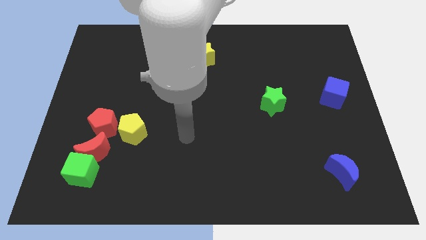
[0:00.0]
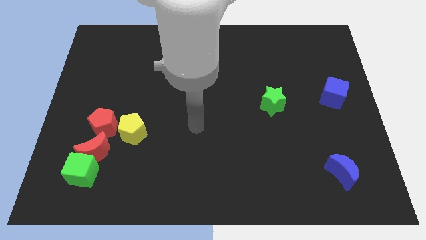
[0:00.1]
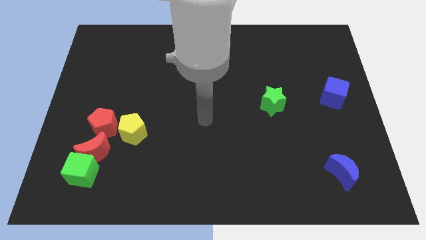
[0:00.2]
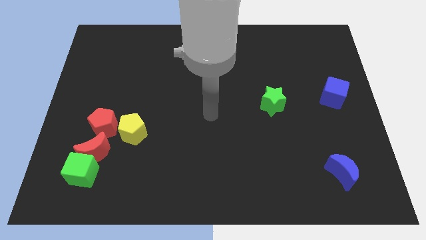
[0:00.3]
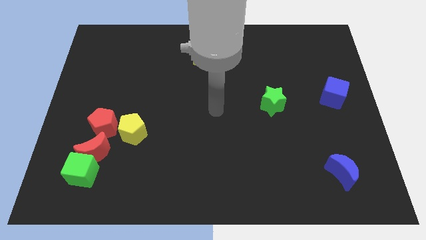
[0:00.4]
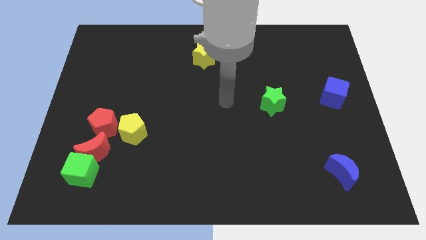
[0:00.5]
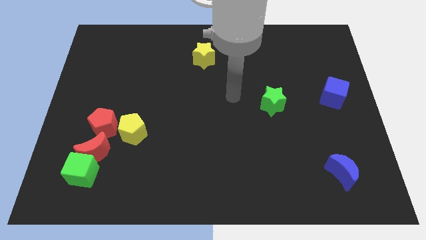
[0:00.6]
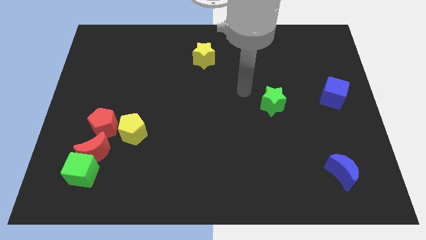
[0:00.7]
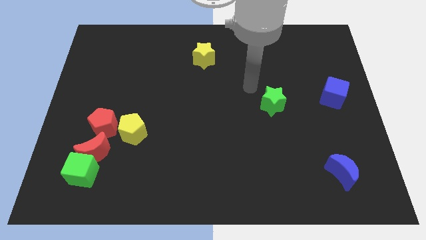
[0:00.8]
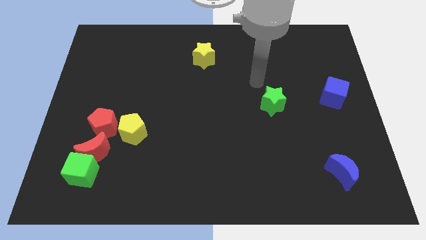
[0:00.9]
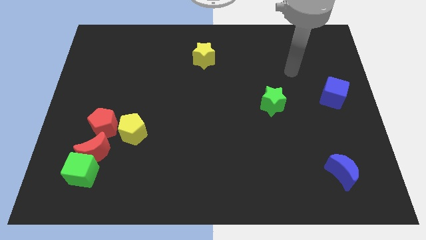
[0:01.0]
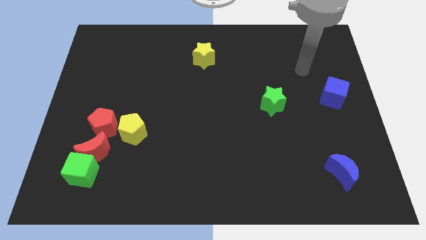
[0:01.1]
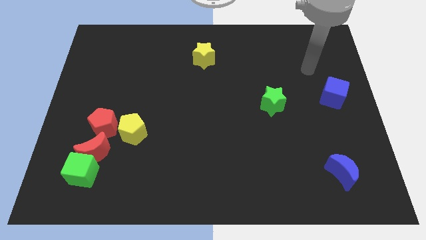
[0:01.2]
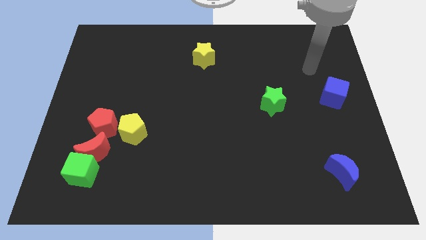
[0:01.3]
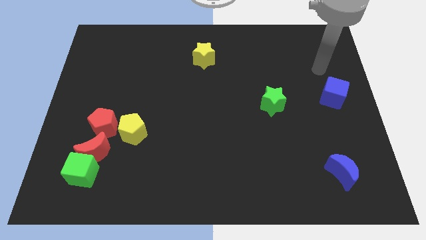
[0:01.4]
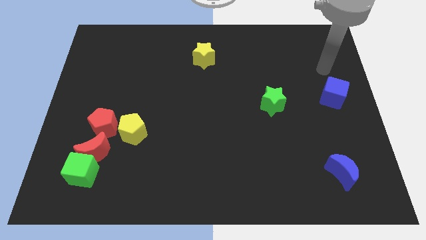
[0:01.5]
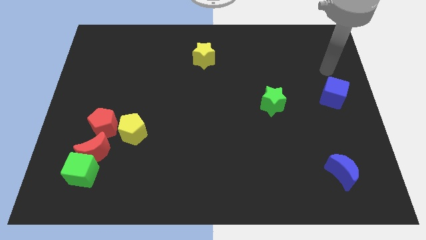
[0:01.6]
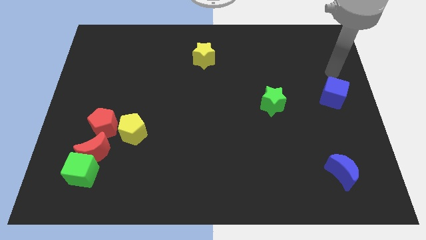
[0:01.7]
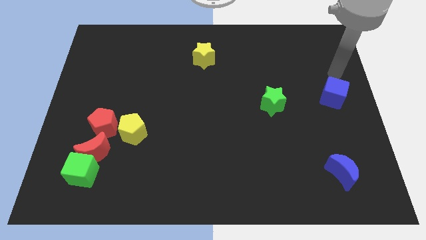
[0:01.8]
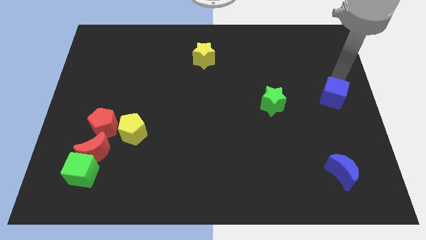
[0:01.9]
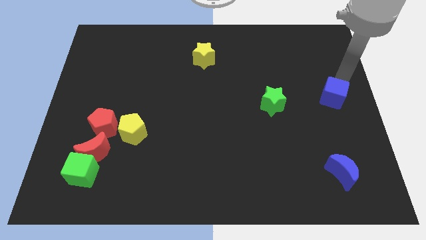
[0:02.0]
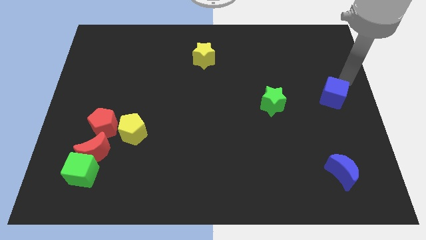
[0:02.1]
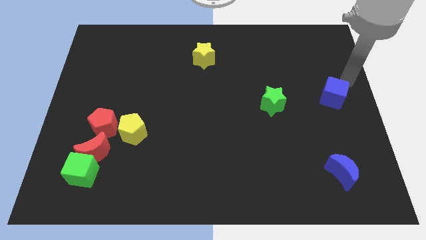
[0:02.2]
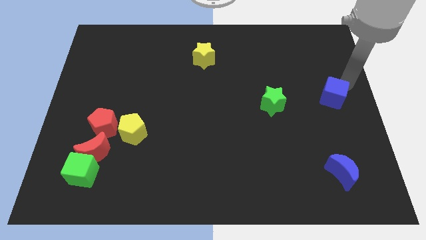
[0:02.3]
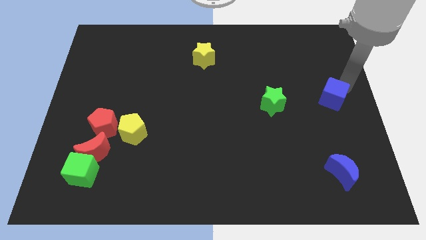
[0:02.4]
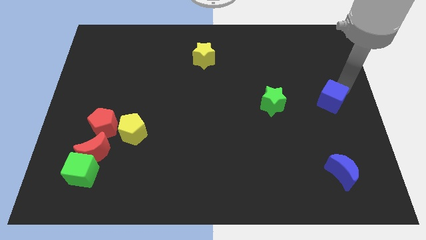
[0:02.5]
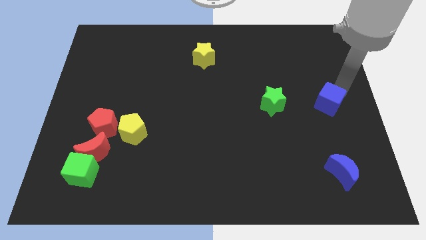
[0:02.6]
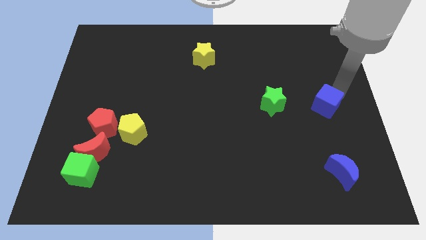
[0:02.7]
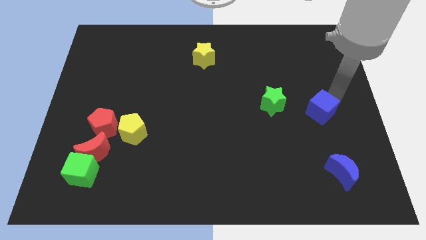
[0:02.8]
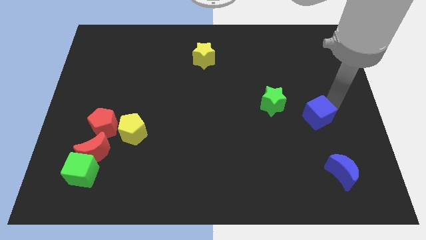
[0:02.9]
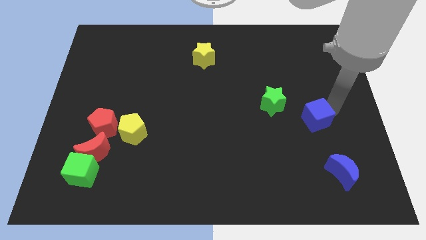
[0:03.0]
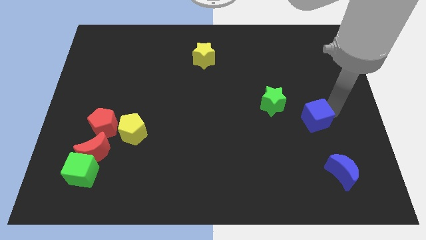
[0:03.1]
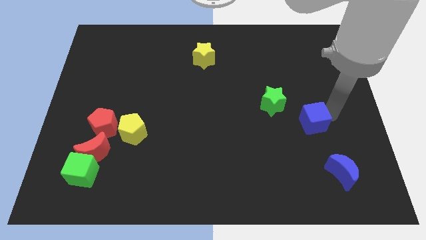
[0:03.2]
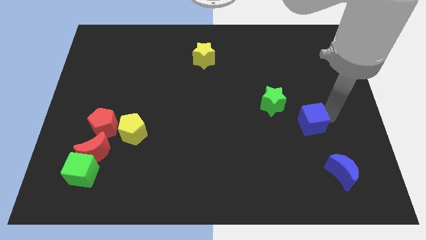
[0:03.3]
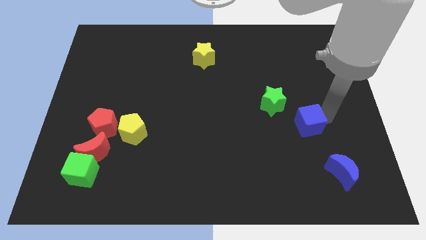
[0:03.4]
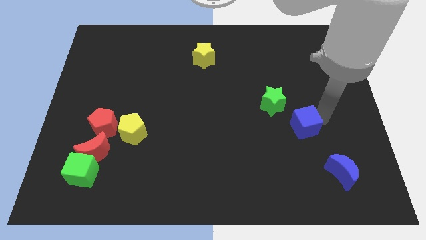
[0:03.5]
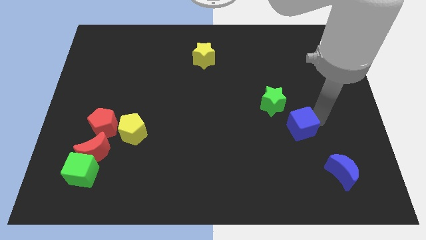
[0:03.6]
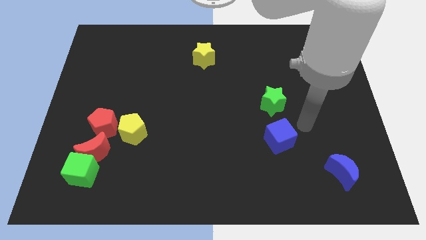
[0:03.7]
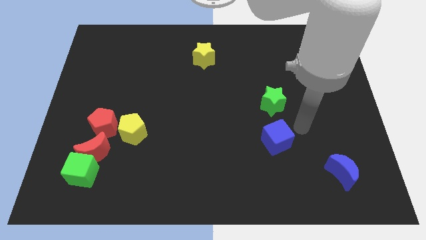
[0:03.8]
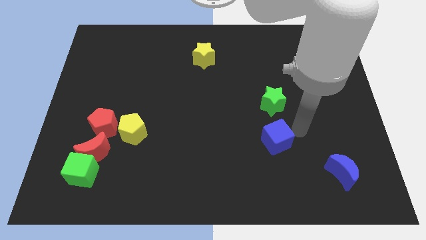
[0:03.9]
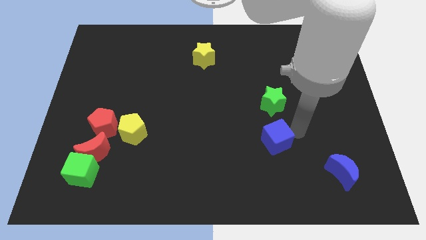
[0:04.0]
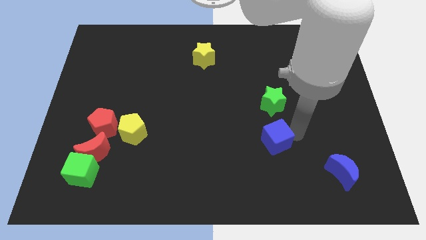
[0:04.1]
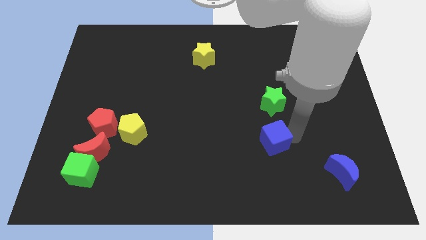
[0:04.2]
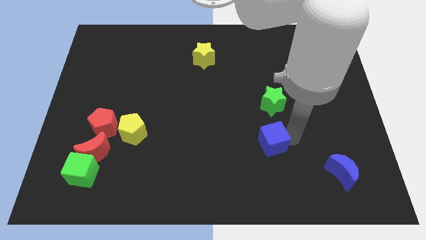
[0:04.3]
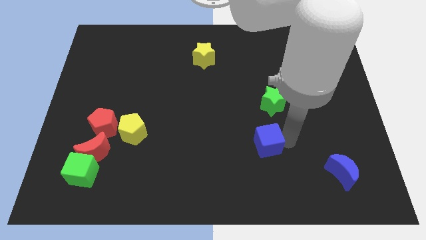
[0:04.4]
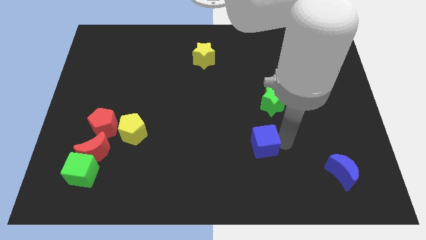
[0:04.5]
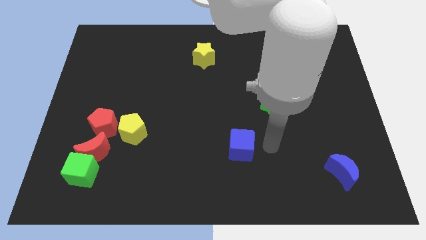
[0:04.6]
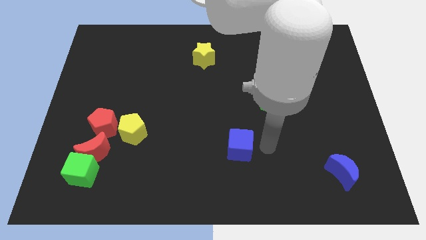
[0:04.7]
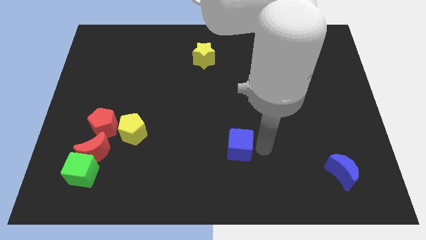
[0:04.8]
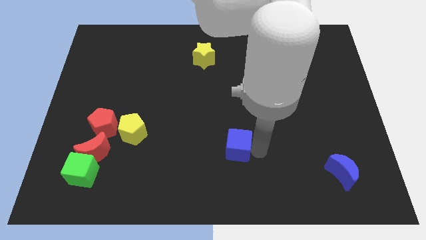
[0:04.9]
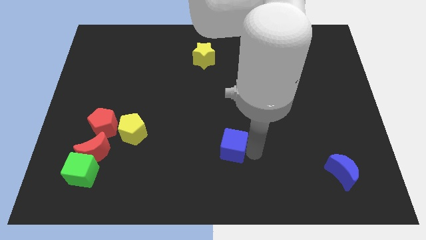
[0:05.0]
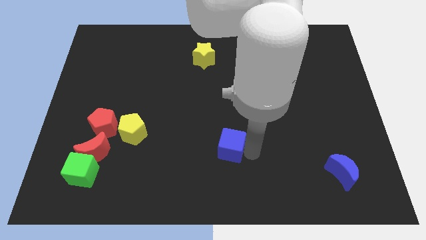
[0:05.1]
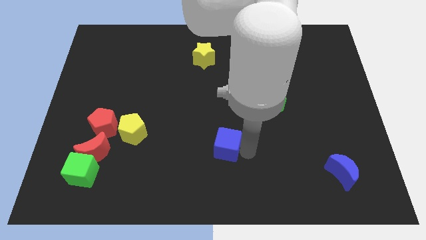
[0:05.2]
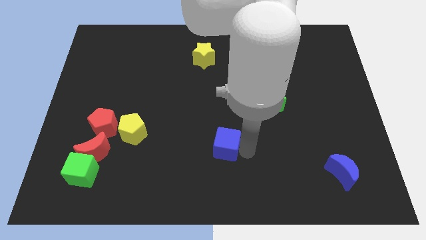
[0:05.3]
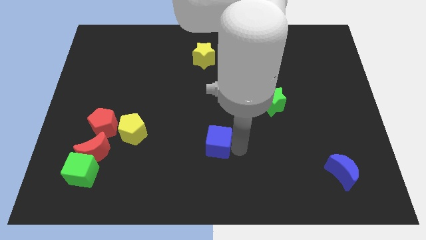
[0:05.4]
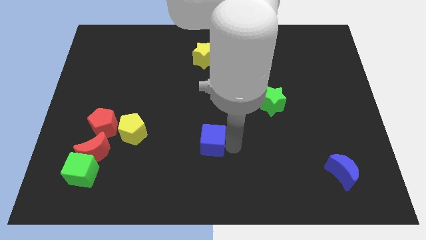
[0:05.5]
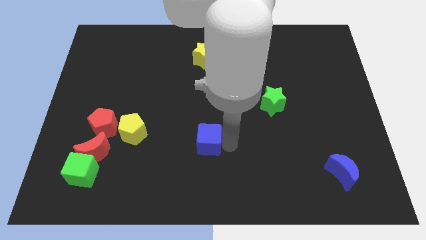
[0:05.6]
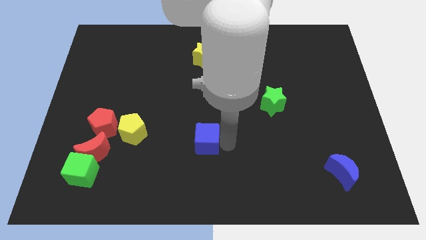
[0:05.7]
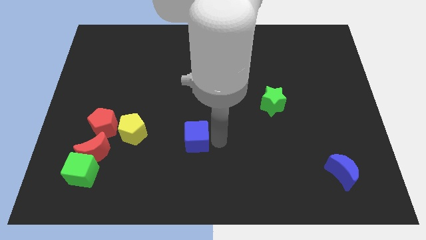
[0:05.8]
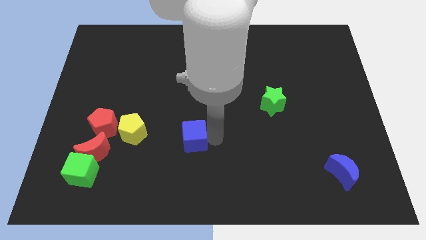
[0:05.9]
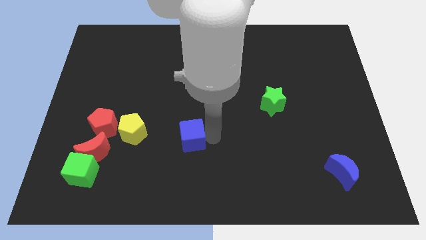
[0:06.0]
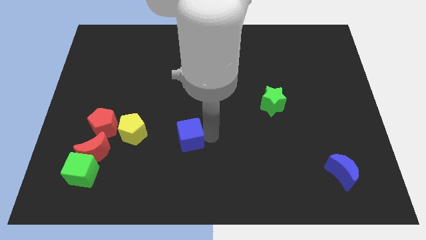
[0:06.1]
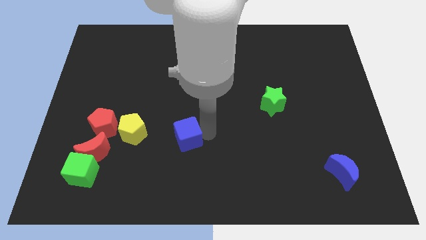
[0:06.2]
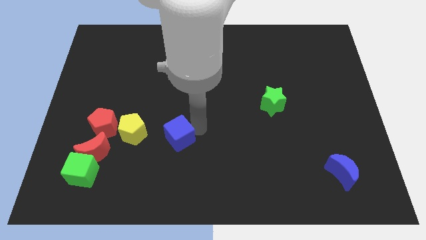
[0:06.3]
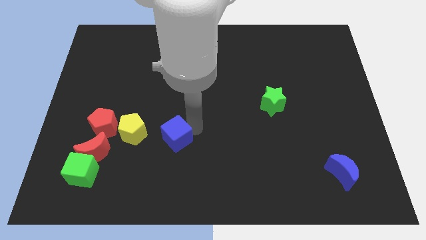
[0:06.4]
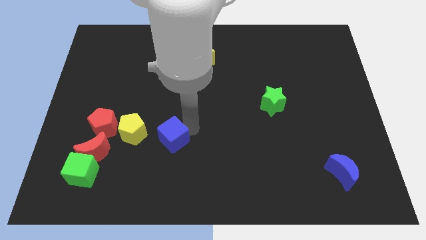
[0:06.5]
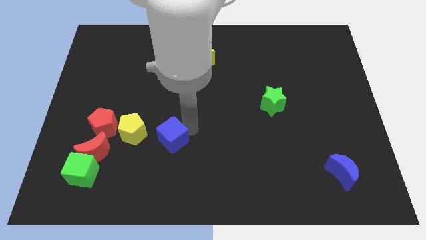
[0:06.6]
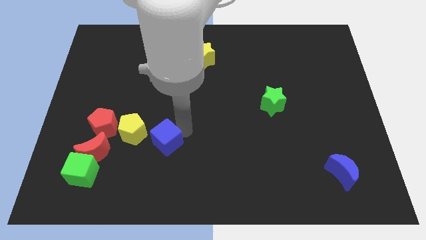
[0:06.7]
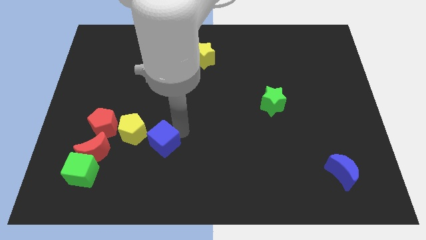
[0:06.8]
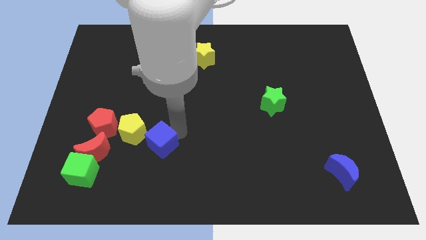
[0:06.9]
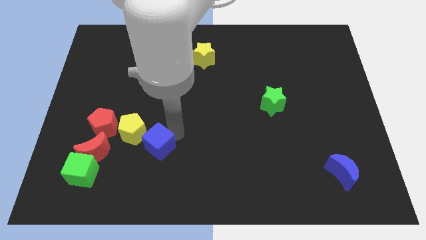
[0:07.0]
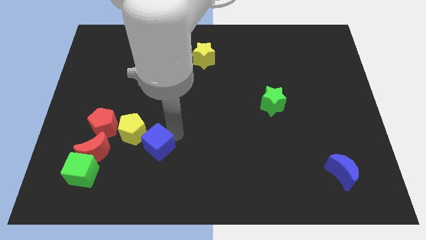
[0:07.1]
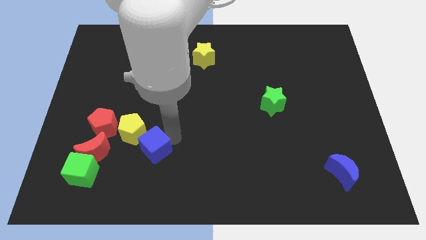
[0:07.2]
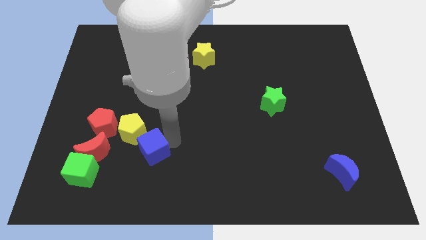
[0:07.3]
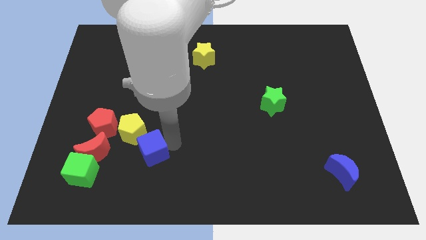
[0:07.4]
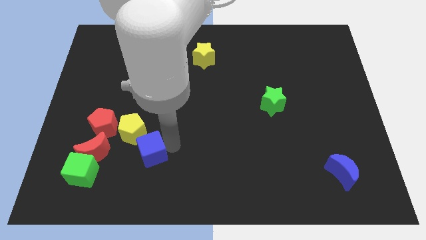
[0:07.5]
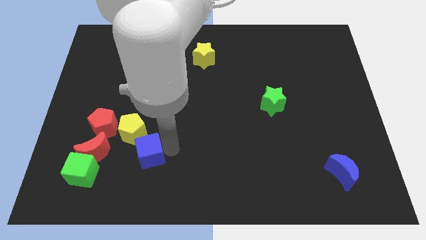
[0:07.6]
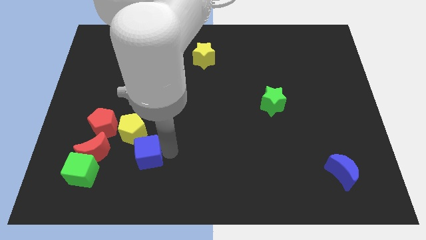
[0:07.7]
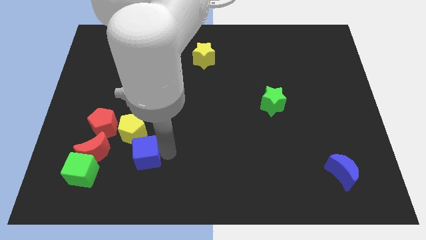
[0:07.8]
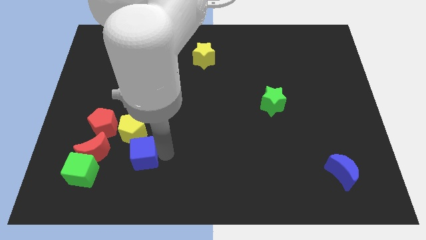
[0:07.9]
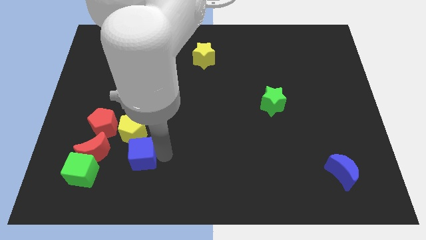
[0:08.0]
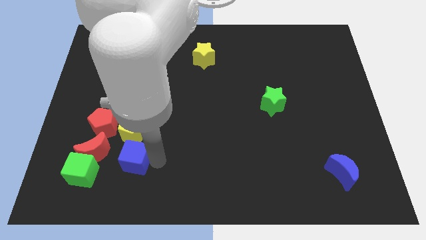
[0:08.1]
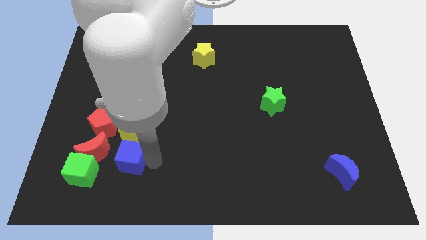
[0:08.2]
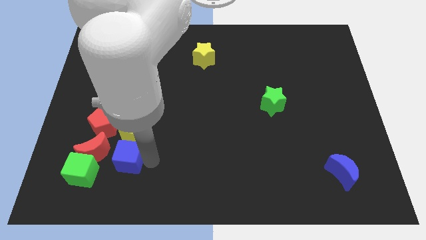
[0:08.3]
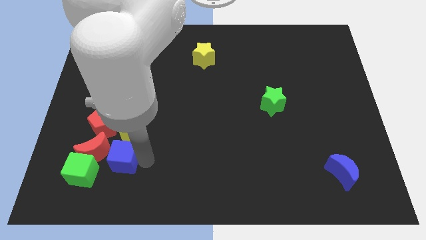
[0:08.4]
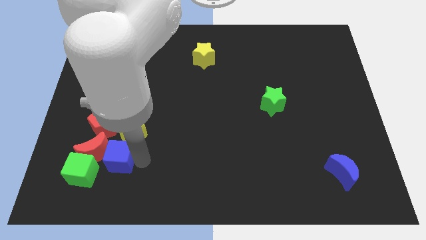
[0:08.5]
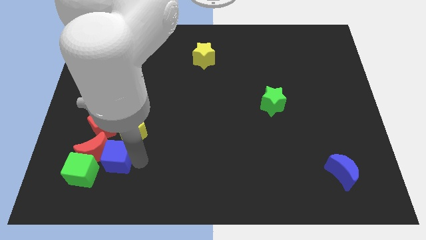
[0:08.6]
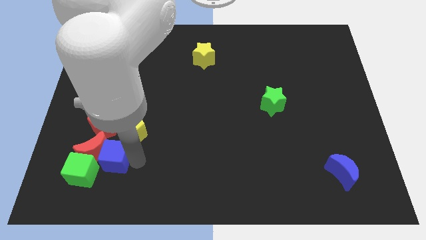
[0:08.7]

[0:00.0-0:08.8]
move the blue cube towards the red moon
